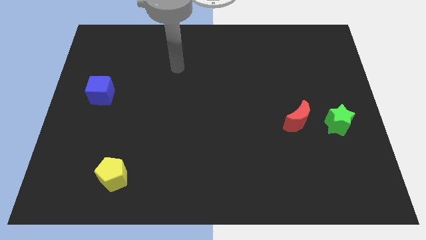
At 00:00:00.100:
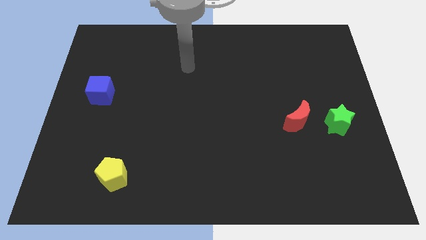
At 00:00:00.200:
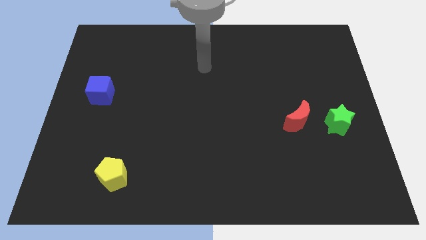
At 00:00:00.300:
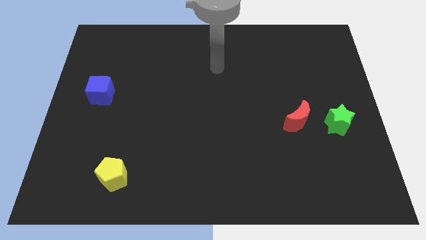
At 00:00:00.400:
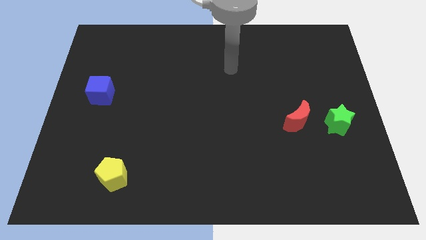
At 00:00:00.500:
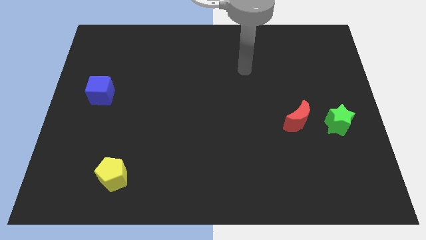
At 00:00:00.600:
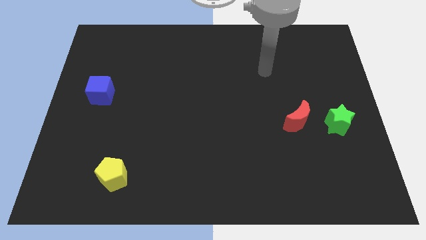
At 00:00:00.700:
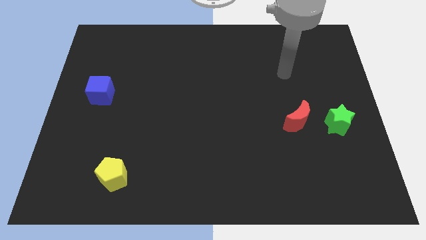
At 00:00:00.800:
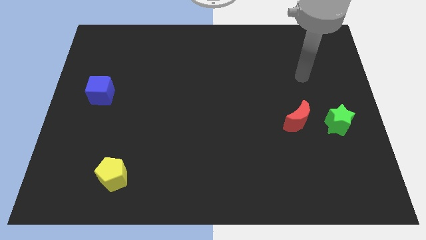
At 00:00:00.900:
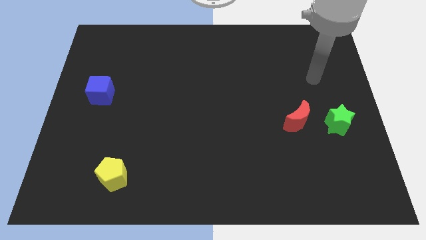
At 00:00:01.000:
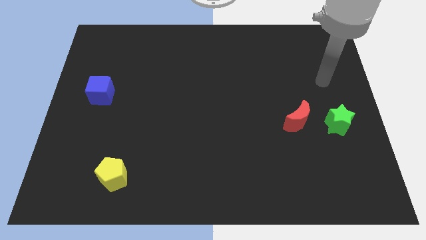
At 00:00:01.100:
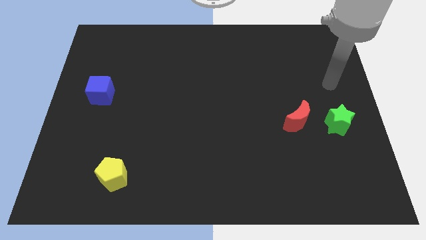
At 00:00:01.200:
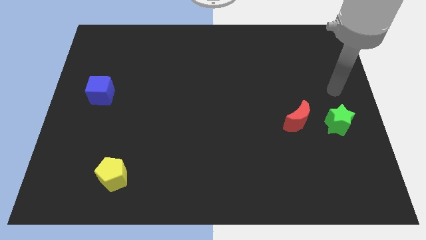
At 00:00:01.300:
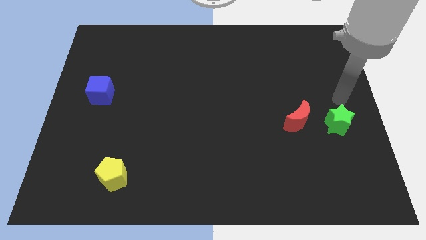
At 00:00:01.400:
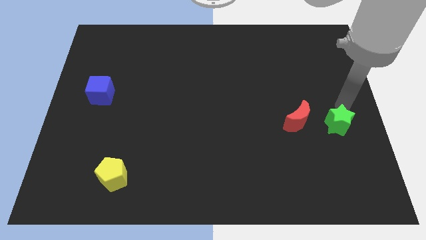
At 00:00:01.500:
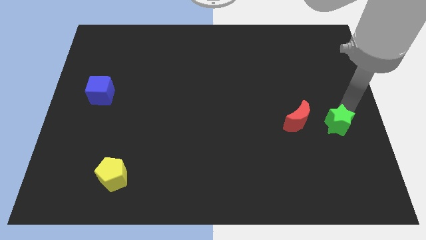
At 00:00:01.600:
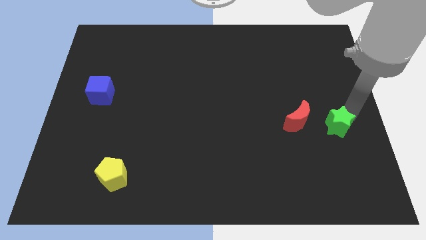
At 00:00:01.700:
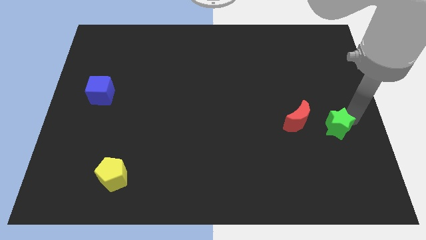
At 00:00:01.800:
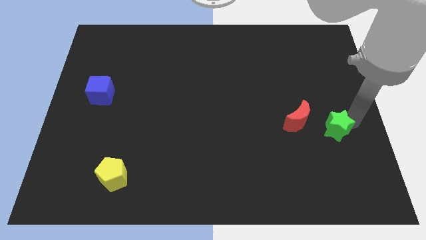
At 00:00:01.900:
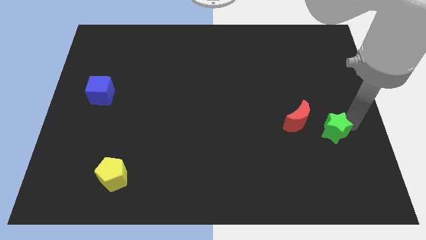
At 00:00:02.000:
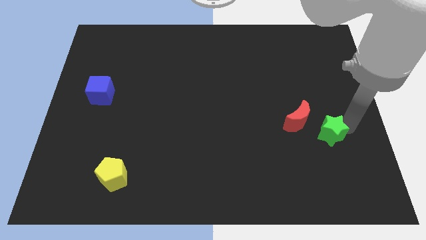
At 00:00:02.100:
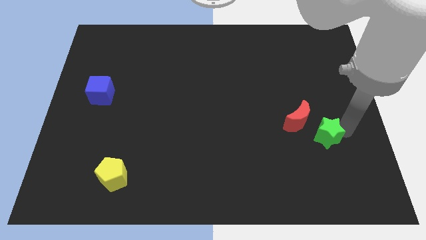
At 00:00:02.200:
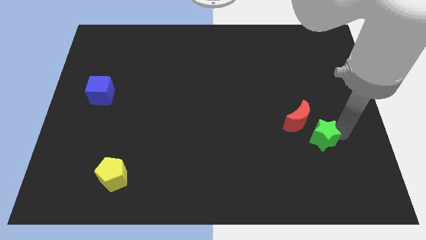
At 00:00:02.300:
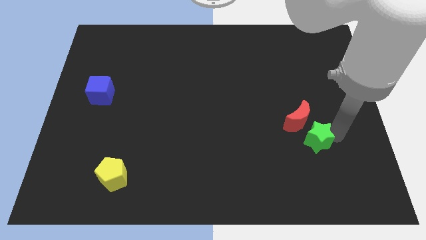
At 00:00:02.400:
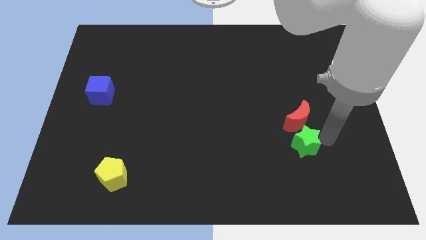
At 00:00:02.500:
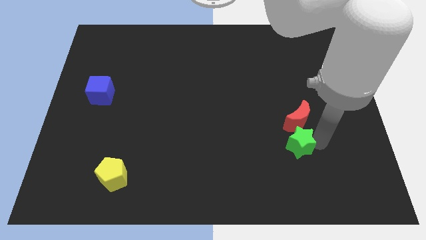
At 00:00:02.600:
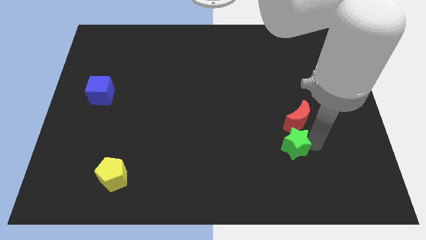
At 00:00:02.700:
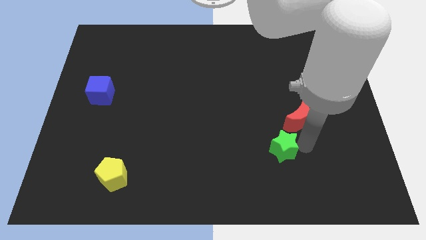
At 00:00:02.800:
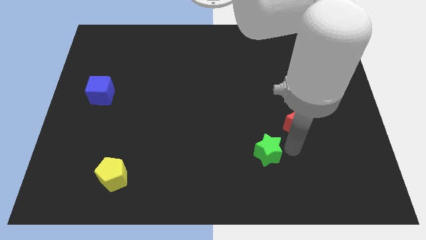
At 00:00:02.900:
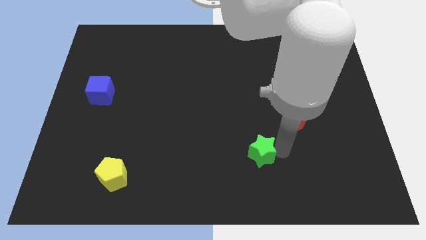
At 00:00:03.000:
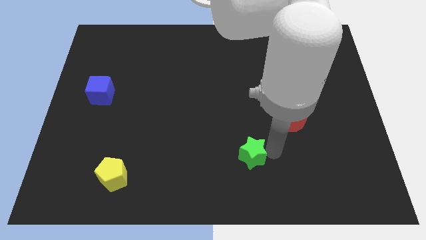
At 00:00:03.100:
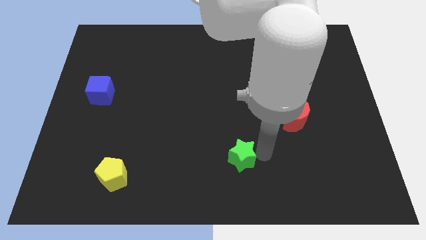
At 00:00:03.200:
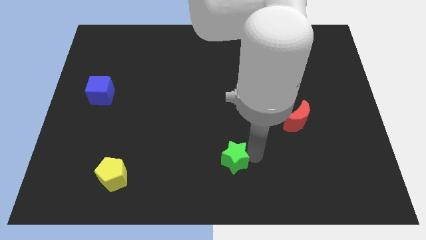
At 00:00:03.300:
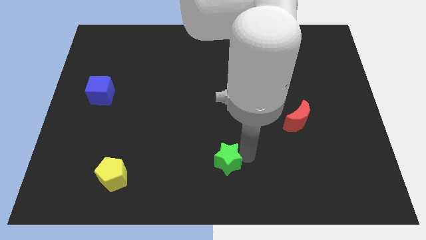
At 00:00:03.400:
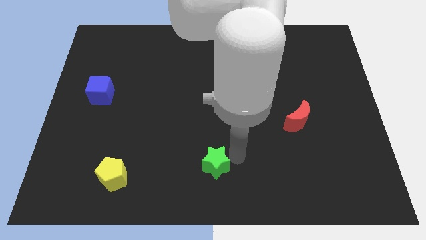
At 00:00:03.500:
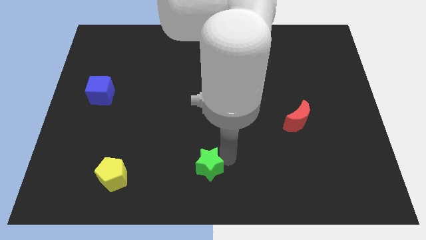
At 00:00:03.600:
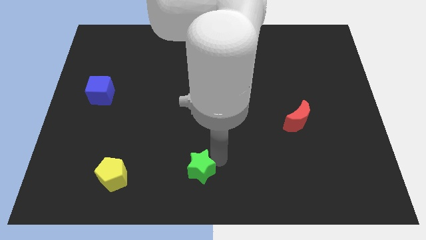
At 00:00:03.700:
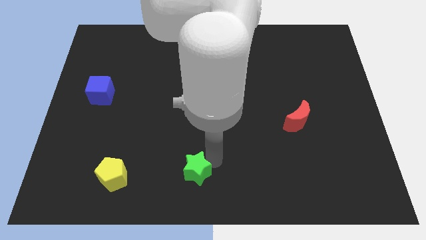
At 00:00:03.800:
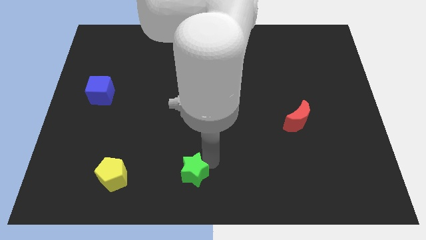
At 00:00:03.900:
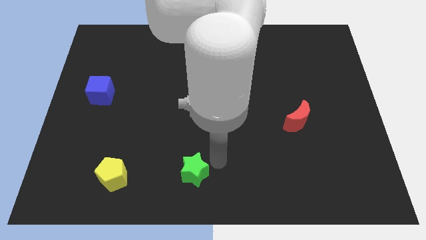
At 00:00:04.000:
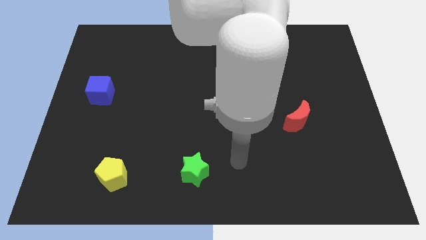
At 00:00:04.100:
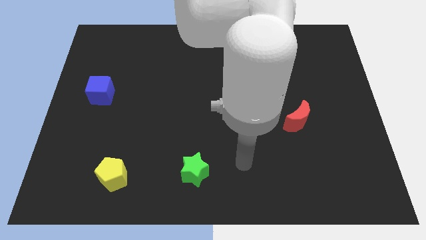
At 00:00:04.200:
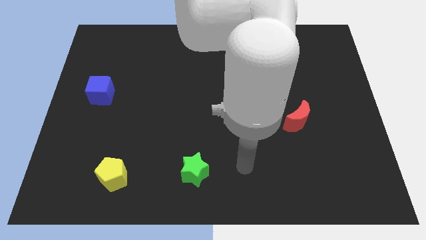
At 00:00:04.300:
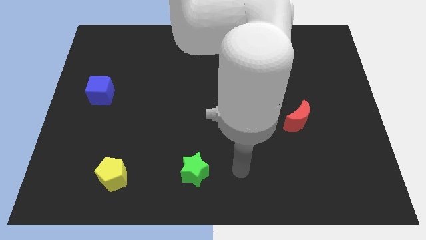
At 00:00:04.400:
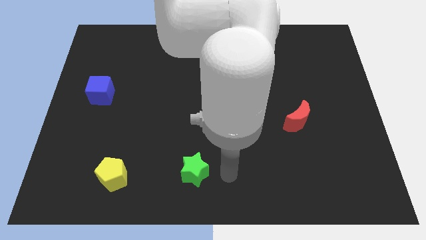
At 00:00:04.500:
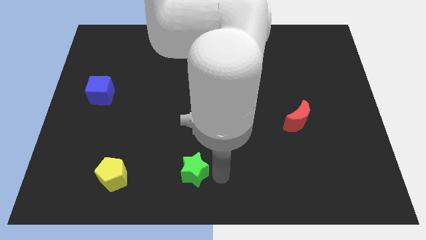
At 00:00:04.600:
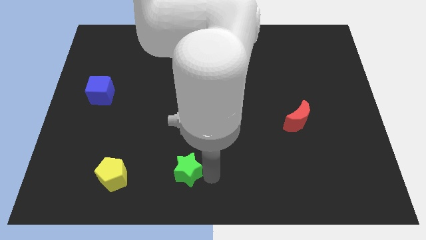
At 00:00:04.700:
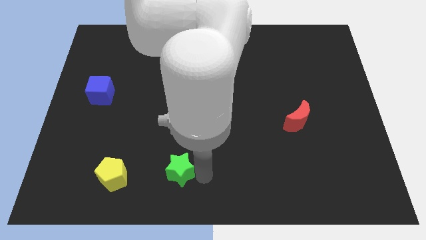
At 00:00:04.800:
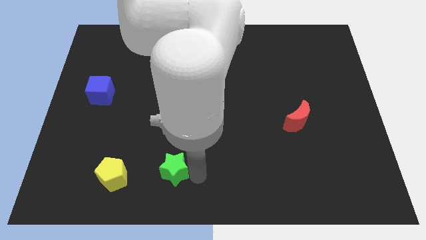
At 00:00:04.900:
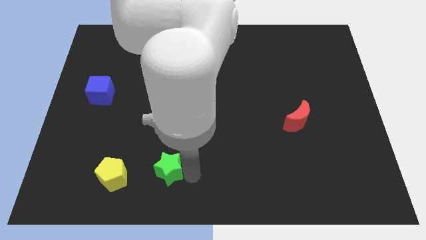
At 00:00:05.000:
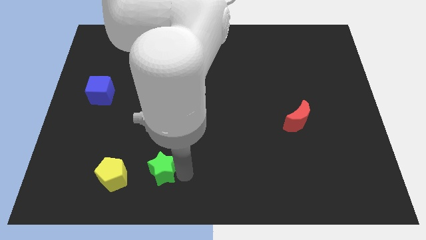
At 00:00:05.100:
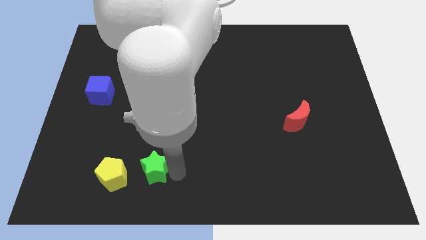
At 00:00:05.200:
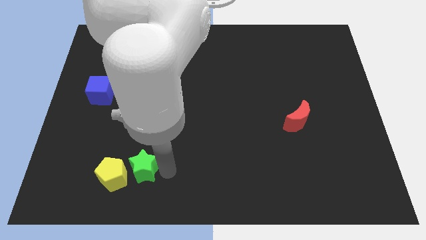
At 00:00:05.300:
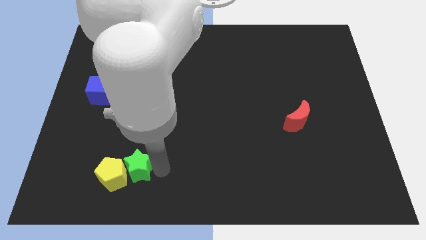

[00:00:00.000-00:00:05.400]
push the star to the yellow pentagon

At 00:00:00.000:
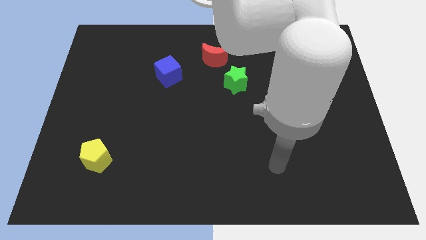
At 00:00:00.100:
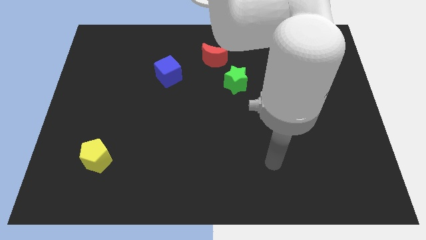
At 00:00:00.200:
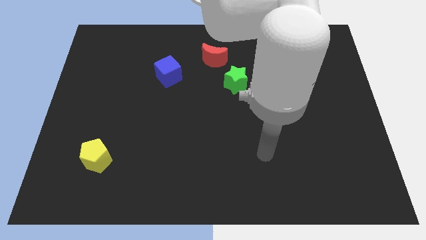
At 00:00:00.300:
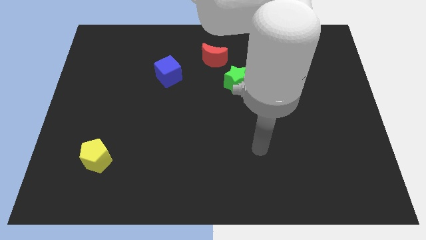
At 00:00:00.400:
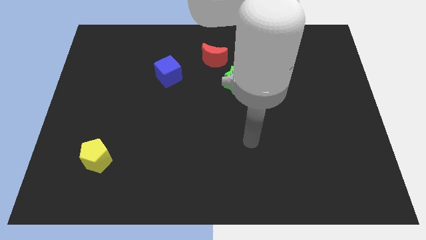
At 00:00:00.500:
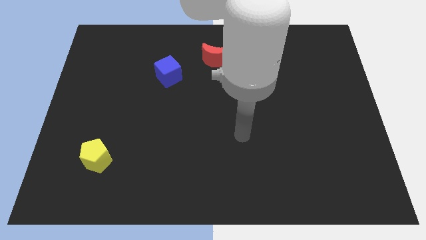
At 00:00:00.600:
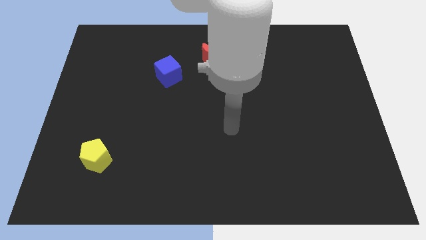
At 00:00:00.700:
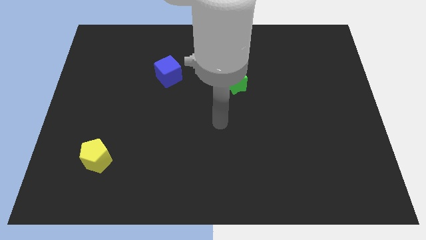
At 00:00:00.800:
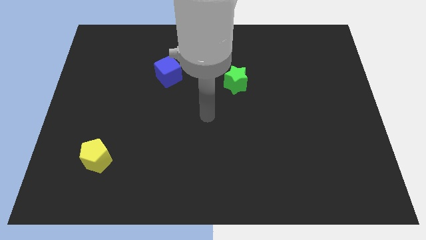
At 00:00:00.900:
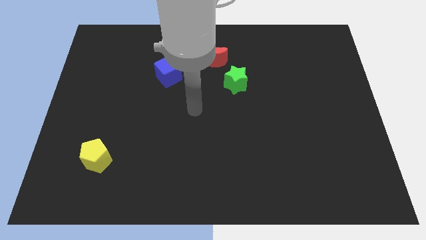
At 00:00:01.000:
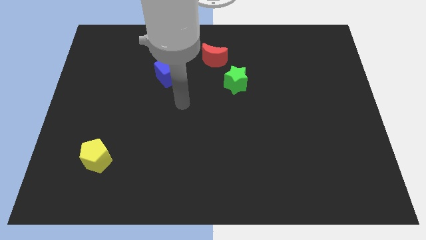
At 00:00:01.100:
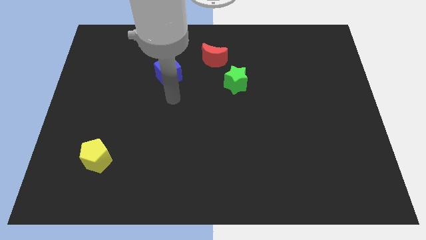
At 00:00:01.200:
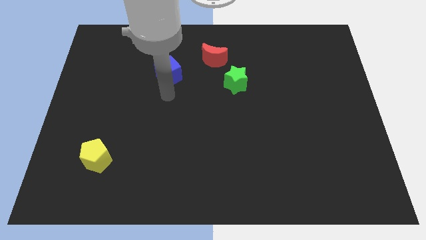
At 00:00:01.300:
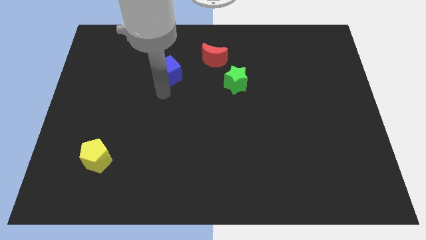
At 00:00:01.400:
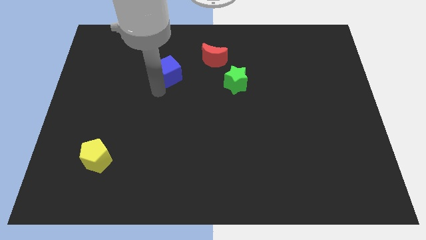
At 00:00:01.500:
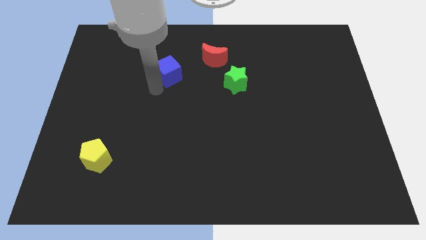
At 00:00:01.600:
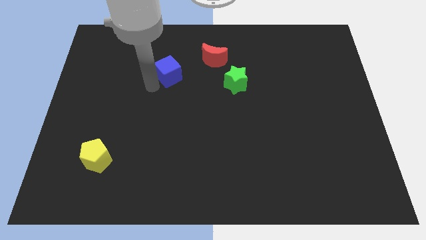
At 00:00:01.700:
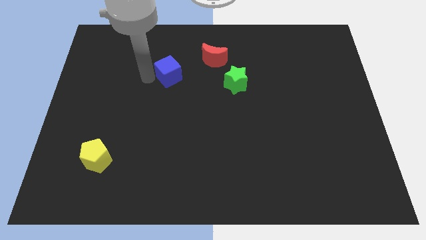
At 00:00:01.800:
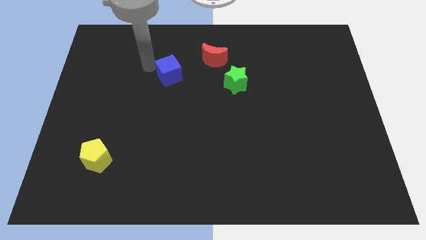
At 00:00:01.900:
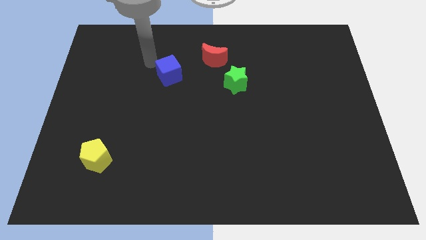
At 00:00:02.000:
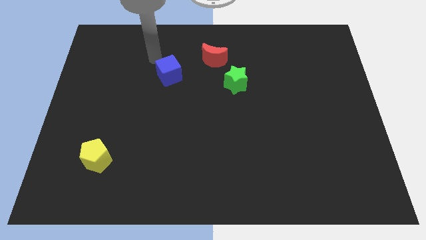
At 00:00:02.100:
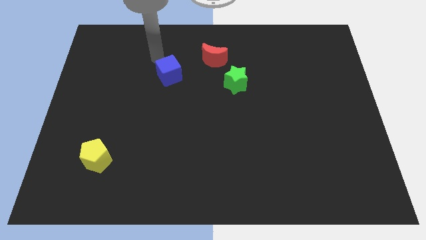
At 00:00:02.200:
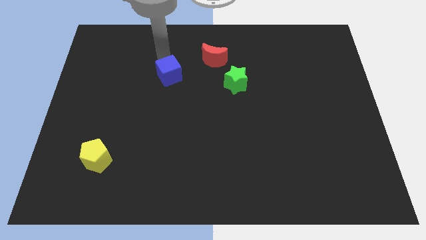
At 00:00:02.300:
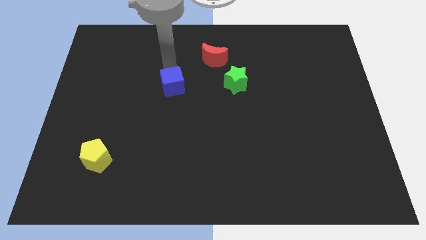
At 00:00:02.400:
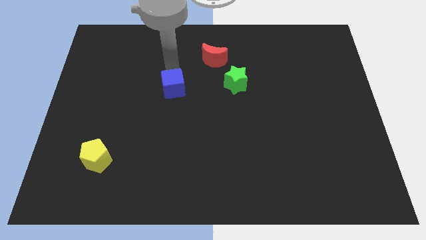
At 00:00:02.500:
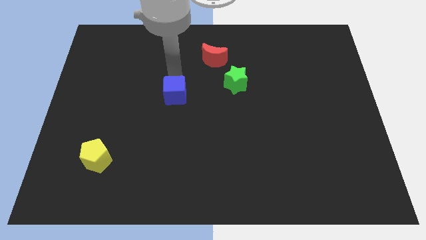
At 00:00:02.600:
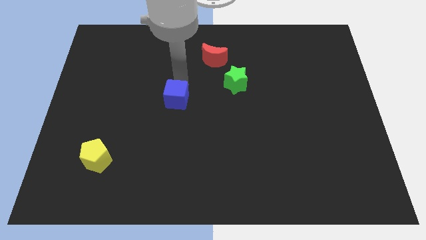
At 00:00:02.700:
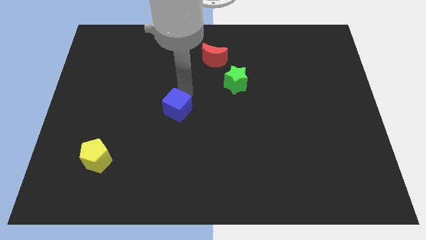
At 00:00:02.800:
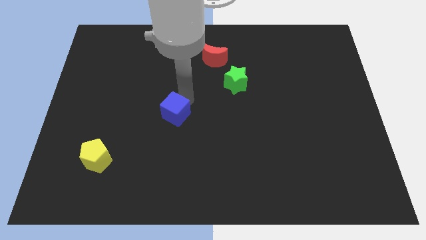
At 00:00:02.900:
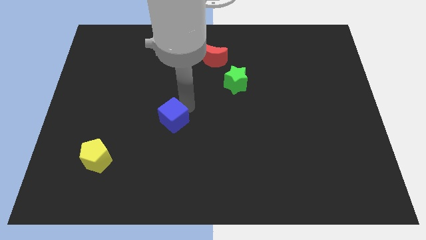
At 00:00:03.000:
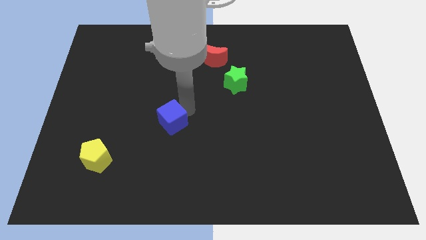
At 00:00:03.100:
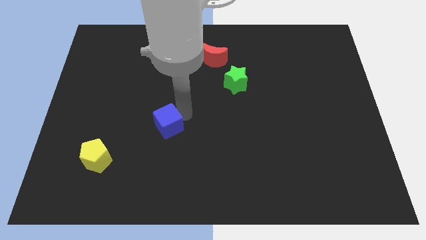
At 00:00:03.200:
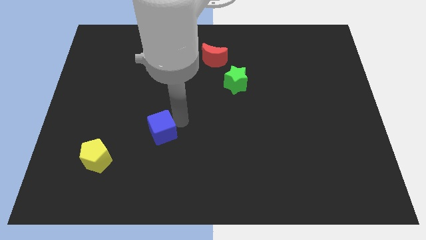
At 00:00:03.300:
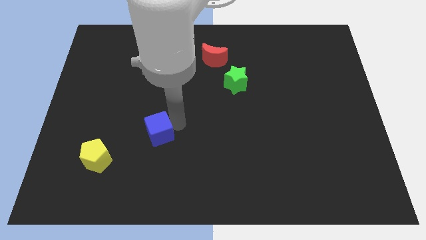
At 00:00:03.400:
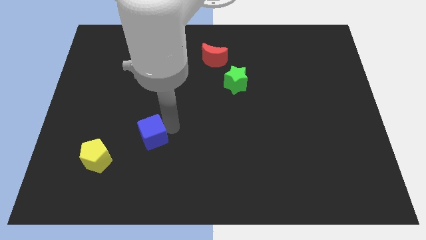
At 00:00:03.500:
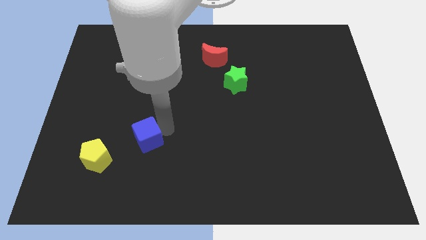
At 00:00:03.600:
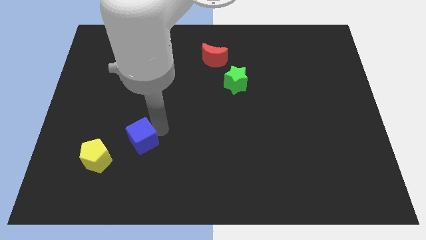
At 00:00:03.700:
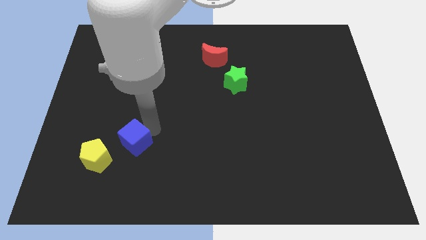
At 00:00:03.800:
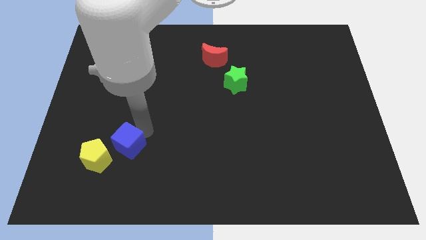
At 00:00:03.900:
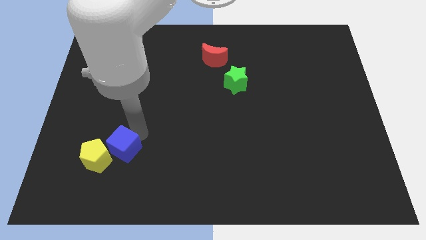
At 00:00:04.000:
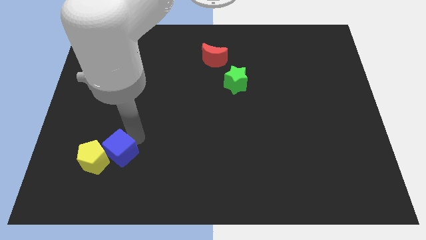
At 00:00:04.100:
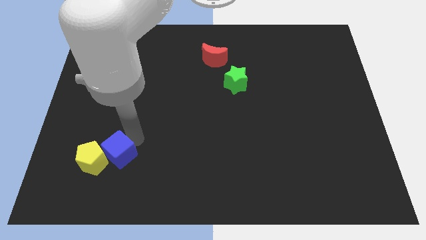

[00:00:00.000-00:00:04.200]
move the blue block next to the pentagon
